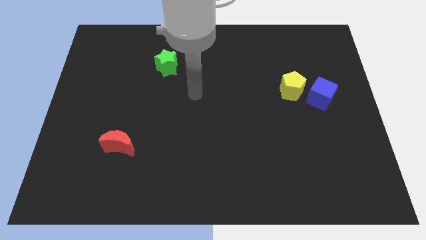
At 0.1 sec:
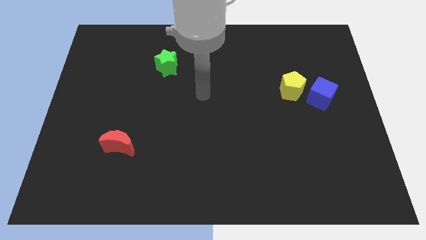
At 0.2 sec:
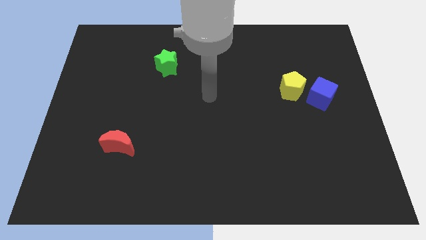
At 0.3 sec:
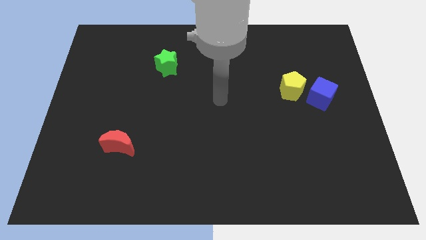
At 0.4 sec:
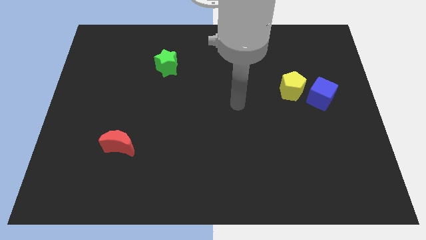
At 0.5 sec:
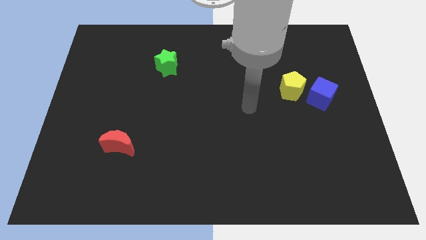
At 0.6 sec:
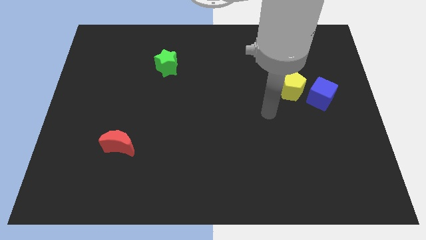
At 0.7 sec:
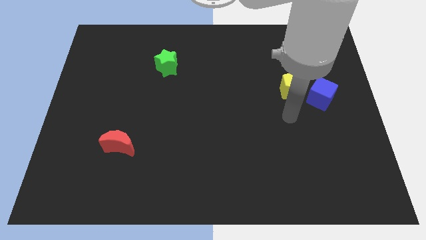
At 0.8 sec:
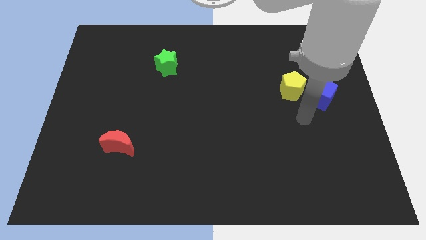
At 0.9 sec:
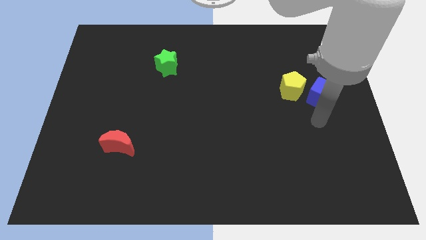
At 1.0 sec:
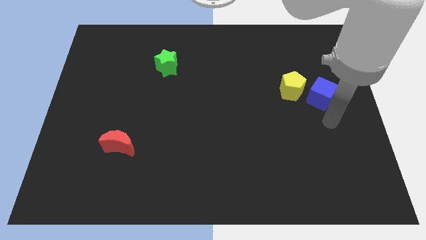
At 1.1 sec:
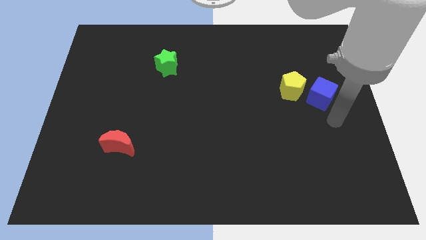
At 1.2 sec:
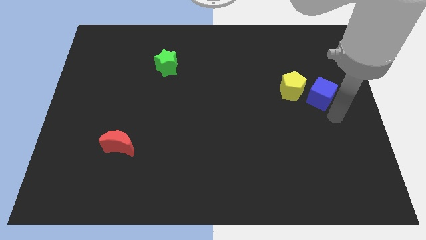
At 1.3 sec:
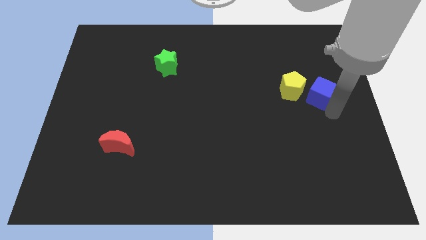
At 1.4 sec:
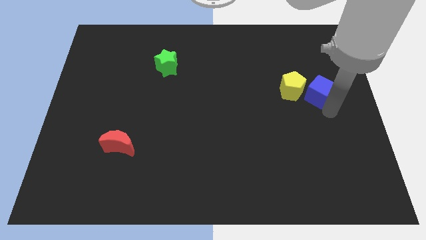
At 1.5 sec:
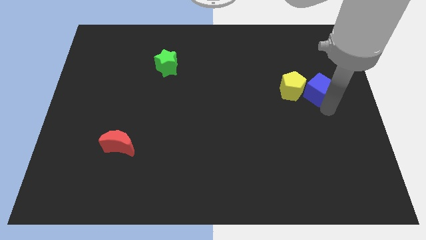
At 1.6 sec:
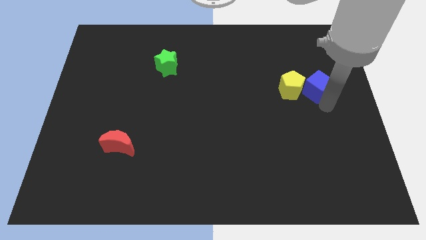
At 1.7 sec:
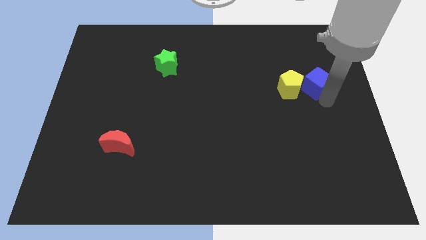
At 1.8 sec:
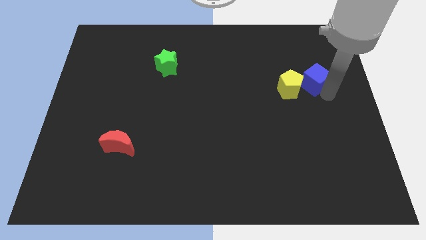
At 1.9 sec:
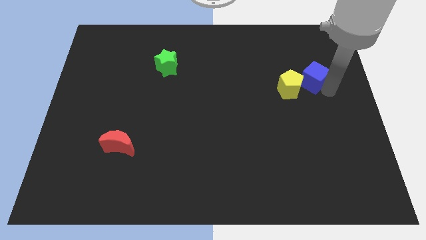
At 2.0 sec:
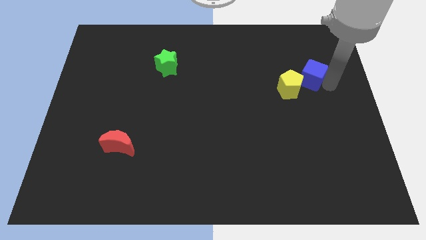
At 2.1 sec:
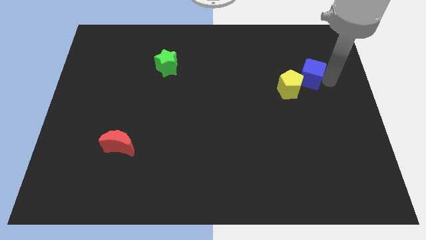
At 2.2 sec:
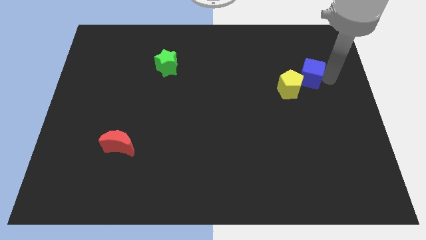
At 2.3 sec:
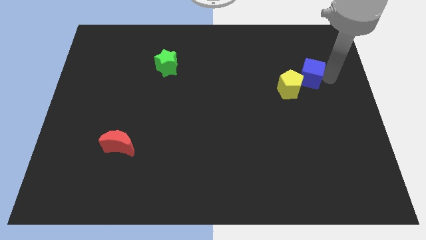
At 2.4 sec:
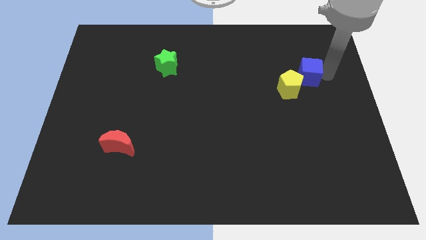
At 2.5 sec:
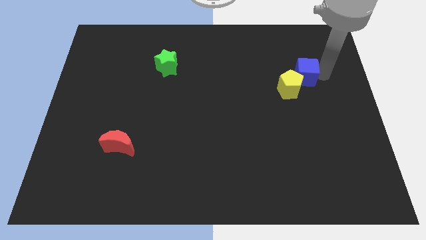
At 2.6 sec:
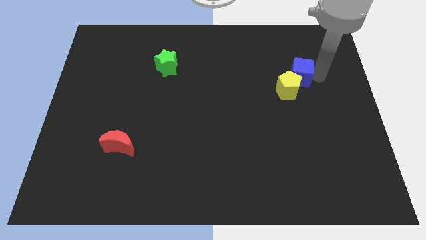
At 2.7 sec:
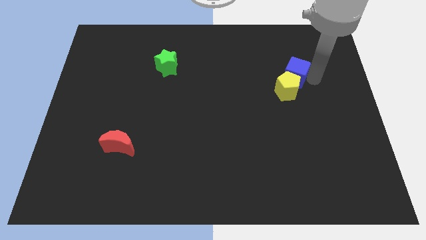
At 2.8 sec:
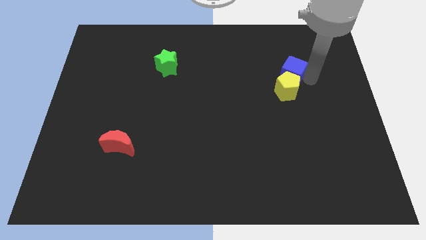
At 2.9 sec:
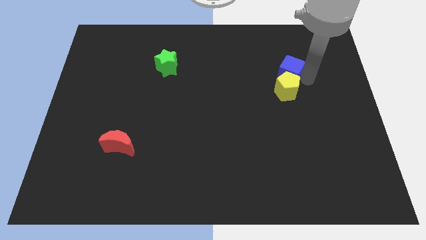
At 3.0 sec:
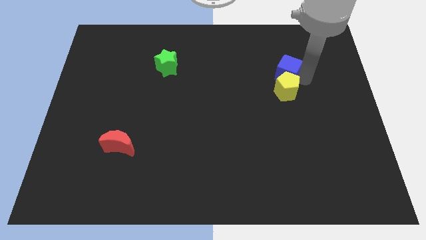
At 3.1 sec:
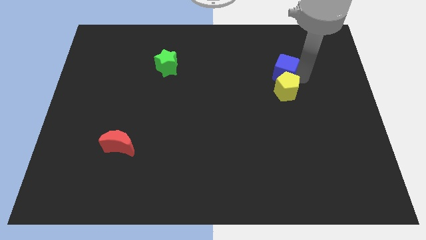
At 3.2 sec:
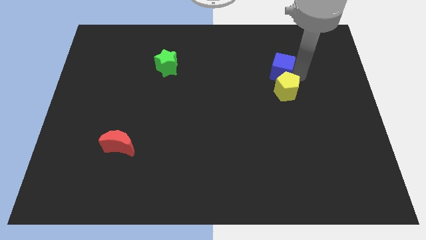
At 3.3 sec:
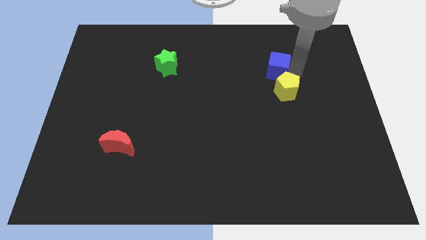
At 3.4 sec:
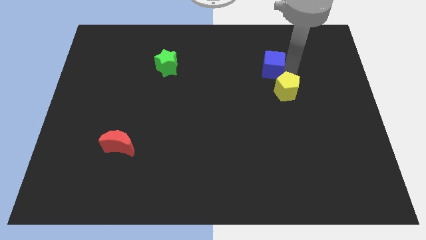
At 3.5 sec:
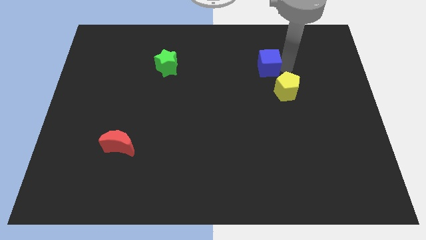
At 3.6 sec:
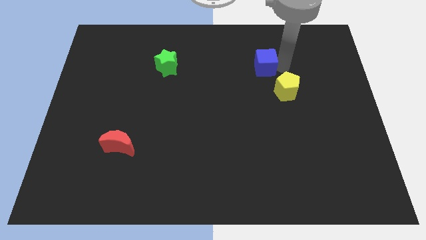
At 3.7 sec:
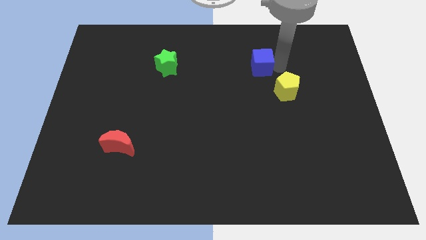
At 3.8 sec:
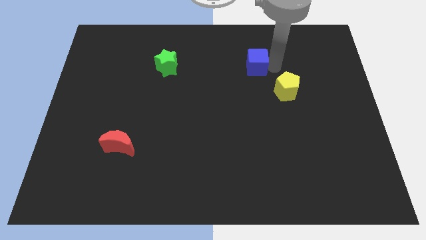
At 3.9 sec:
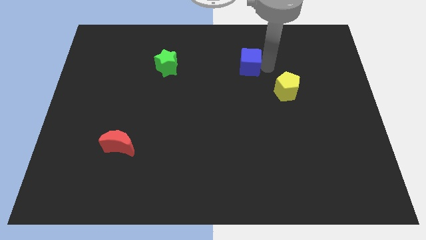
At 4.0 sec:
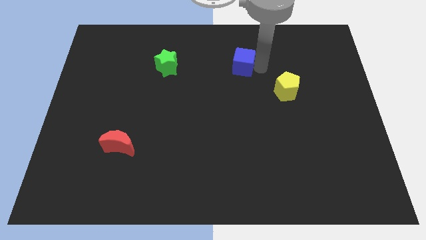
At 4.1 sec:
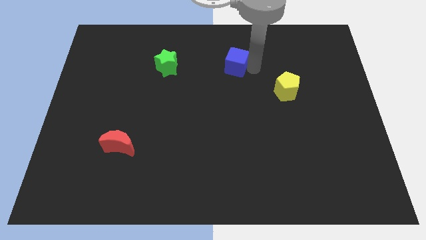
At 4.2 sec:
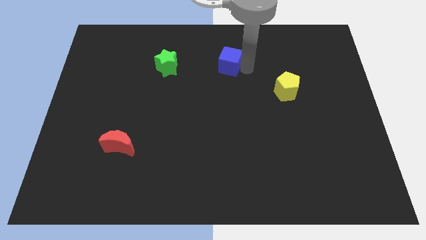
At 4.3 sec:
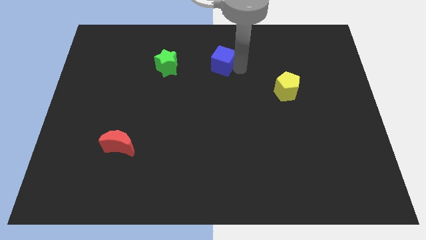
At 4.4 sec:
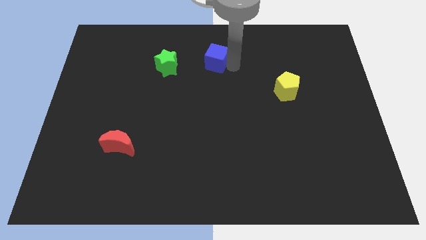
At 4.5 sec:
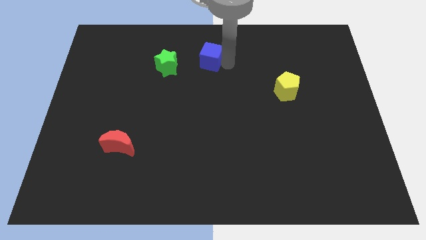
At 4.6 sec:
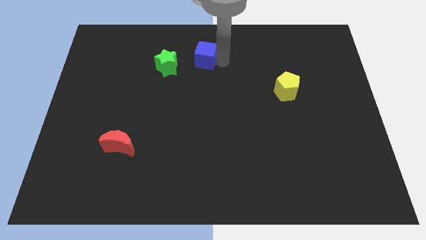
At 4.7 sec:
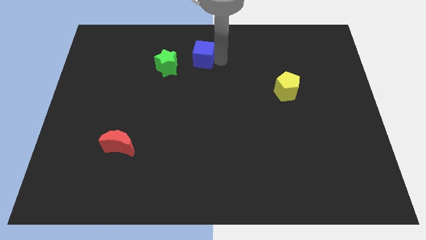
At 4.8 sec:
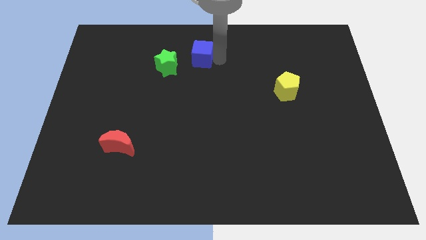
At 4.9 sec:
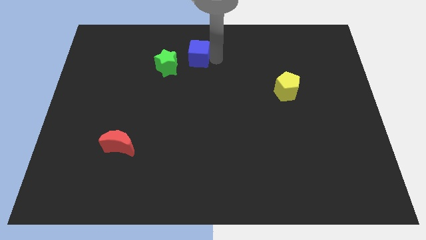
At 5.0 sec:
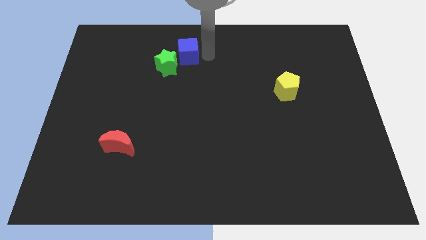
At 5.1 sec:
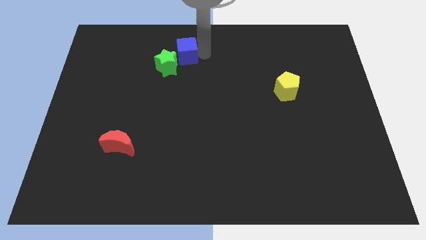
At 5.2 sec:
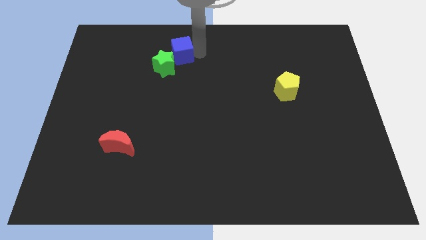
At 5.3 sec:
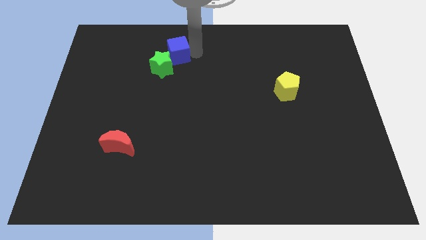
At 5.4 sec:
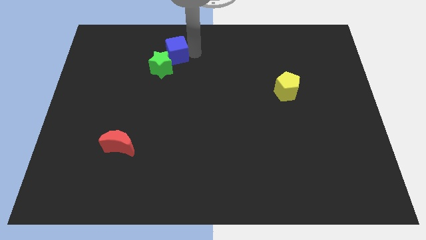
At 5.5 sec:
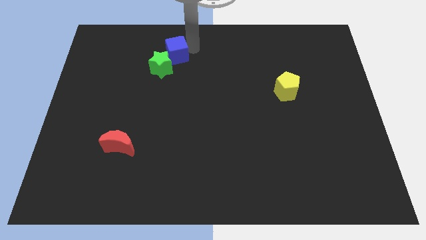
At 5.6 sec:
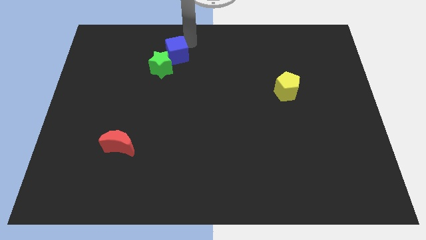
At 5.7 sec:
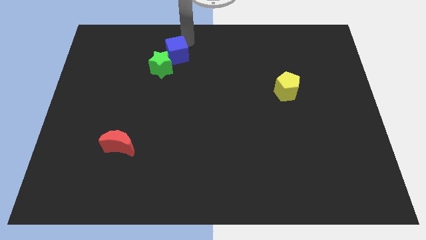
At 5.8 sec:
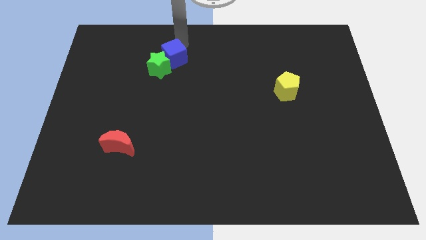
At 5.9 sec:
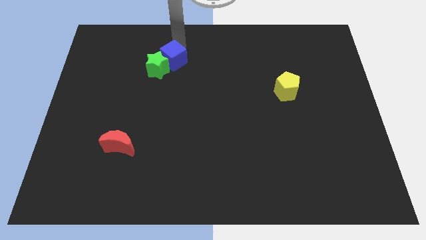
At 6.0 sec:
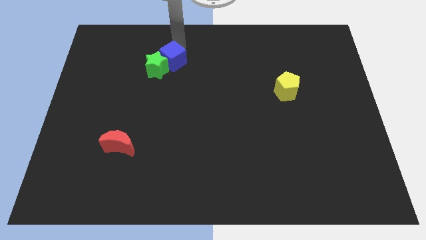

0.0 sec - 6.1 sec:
put the blue cube to the star

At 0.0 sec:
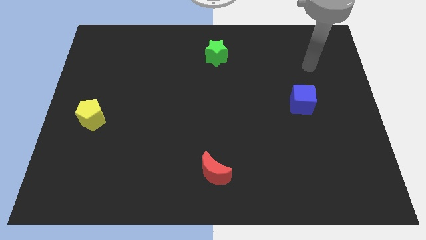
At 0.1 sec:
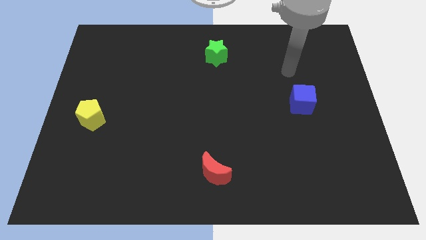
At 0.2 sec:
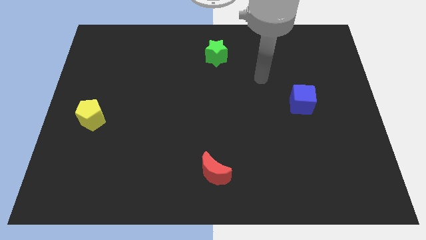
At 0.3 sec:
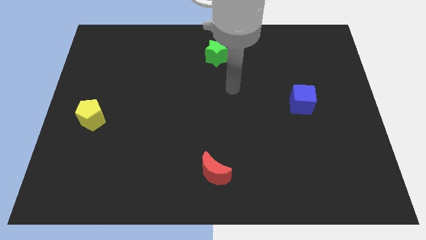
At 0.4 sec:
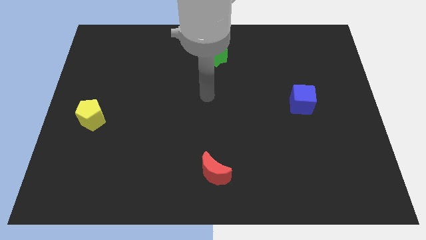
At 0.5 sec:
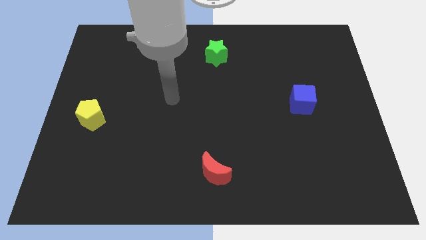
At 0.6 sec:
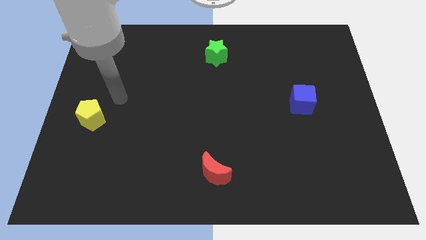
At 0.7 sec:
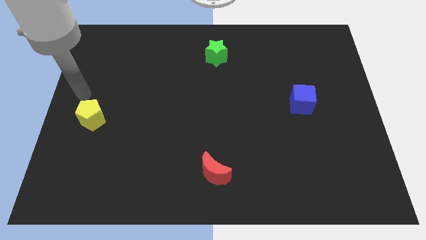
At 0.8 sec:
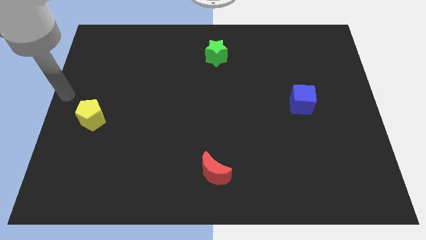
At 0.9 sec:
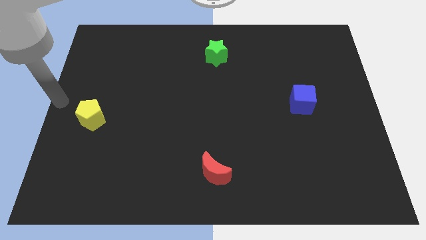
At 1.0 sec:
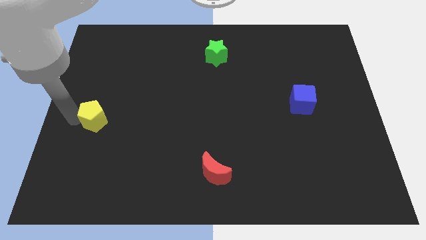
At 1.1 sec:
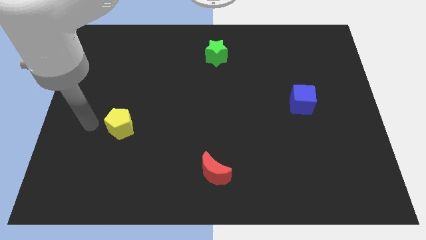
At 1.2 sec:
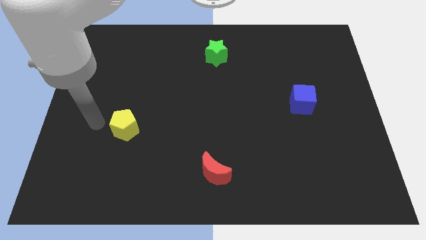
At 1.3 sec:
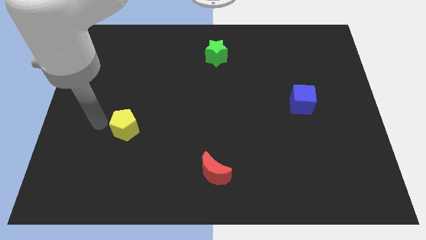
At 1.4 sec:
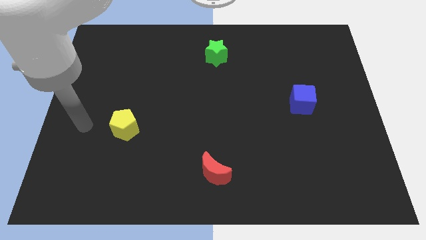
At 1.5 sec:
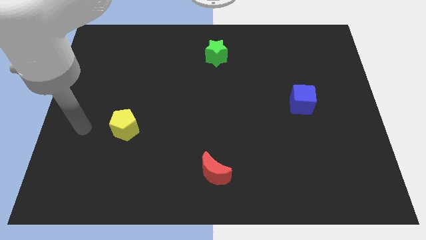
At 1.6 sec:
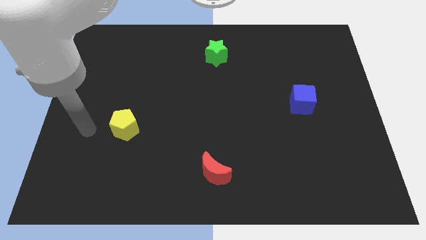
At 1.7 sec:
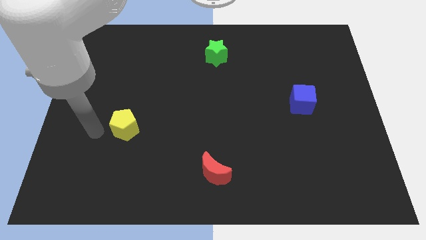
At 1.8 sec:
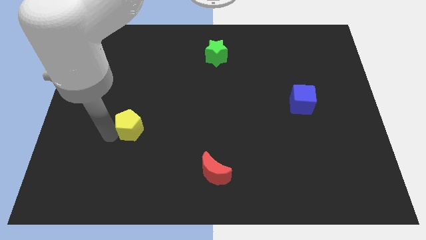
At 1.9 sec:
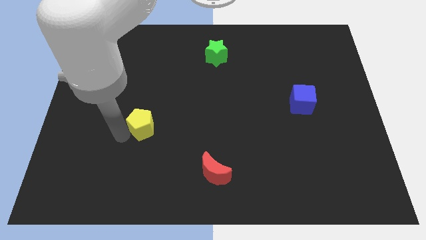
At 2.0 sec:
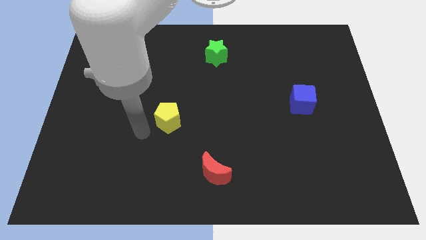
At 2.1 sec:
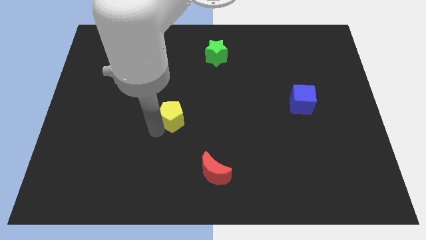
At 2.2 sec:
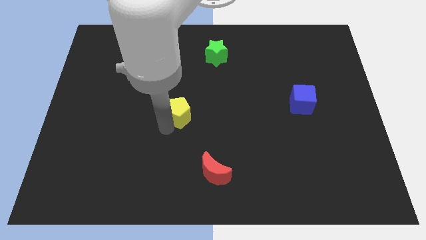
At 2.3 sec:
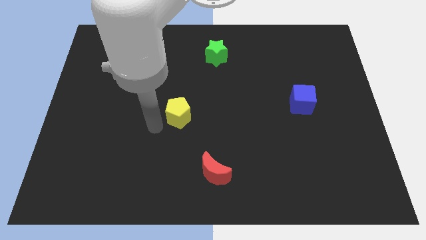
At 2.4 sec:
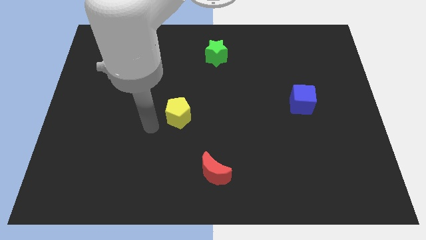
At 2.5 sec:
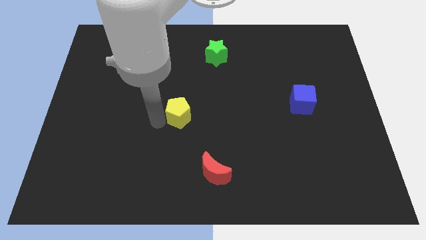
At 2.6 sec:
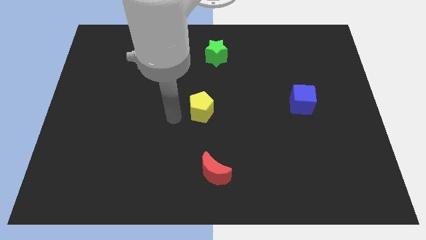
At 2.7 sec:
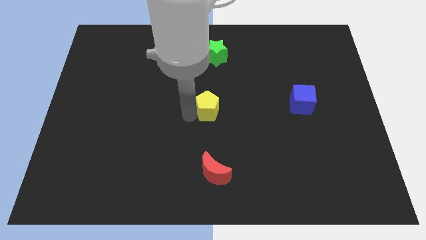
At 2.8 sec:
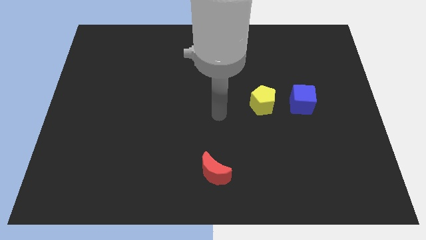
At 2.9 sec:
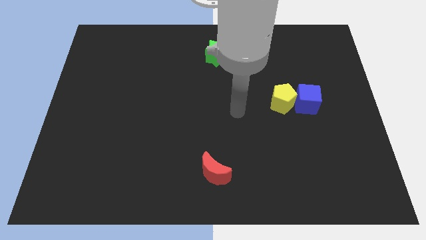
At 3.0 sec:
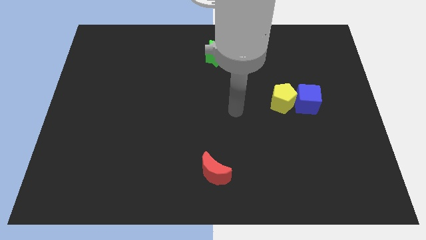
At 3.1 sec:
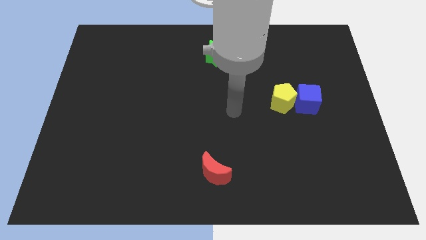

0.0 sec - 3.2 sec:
push the yellow block to the blue block
